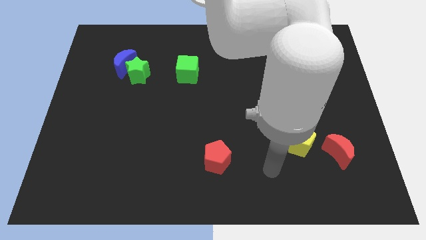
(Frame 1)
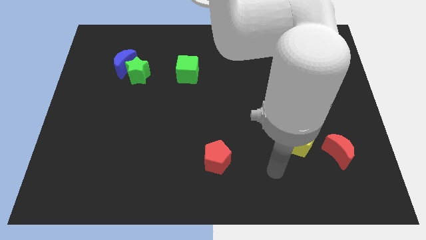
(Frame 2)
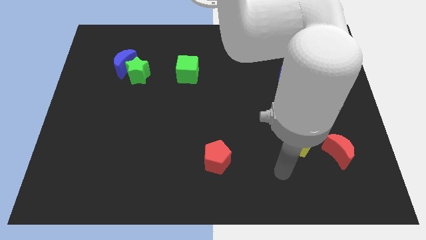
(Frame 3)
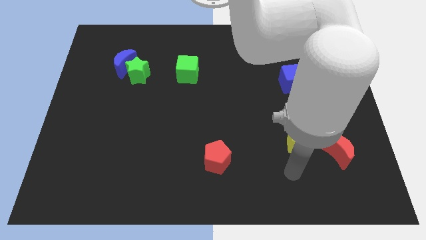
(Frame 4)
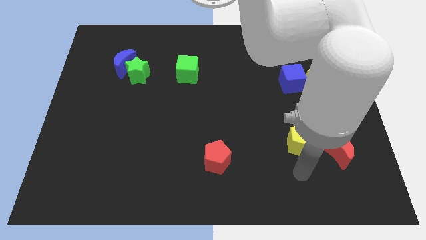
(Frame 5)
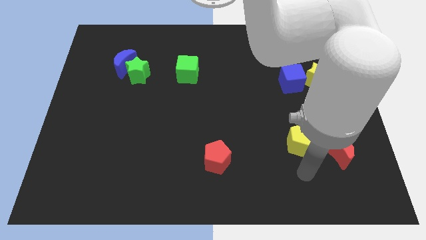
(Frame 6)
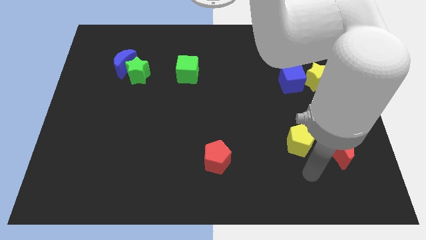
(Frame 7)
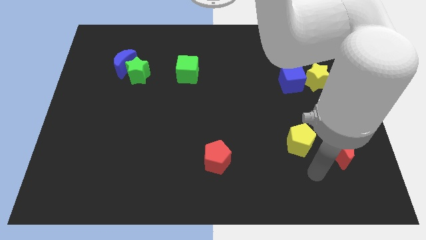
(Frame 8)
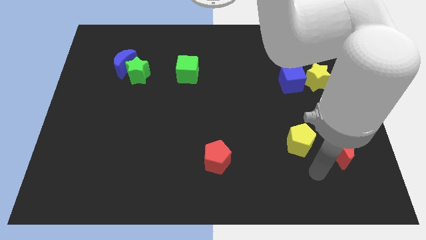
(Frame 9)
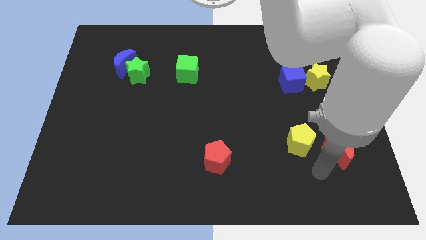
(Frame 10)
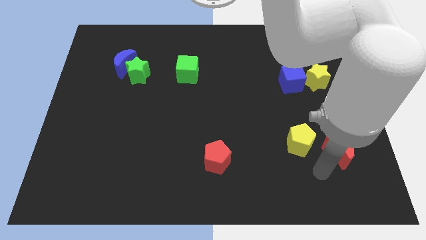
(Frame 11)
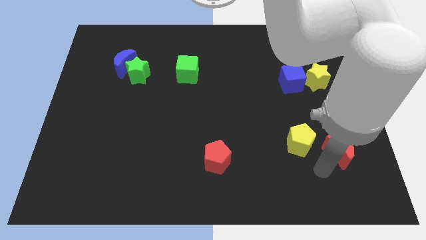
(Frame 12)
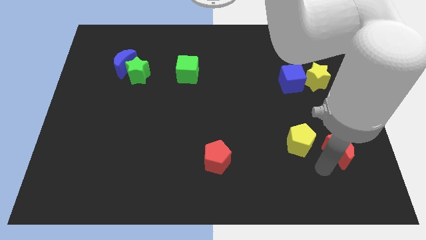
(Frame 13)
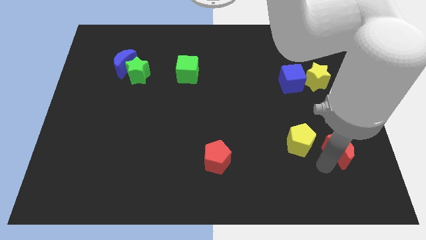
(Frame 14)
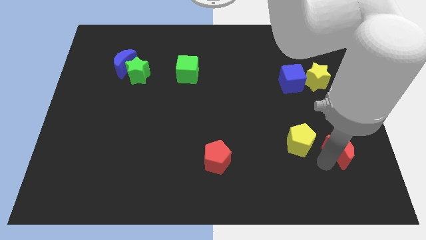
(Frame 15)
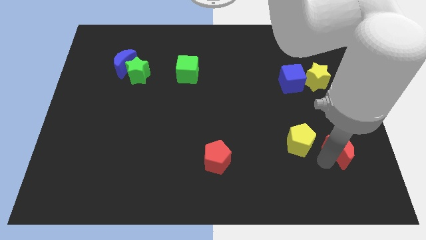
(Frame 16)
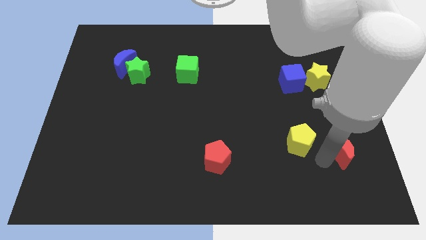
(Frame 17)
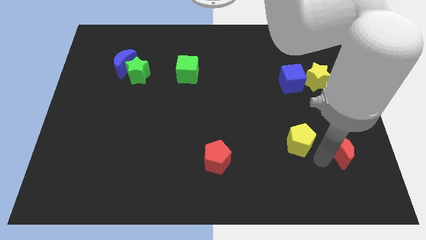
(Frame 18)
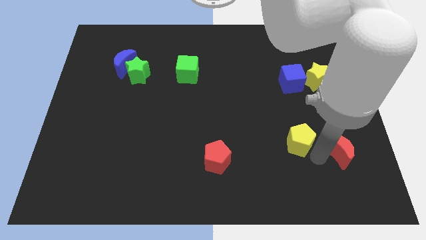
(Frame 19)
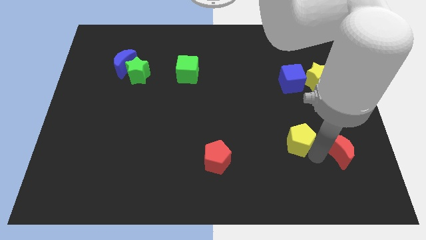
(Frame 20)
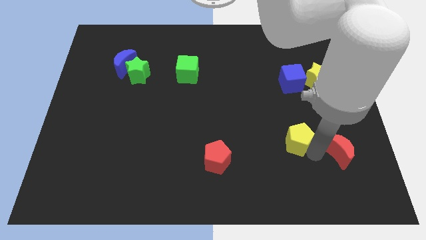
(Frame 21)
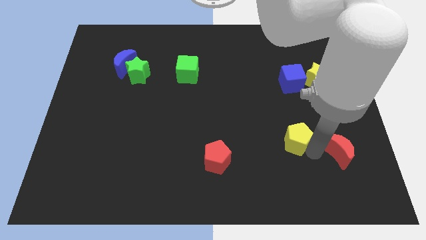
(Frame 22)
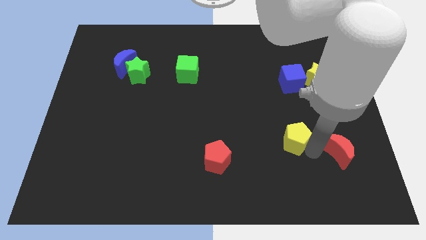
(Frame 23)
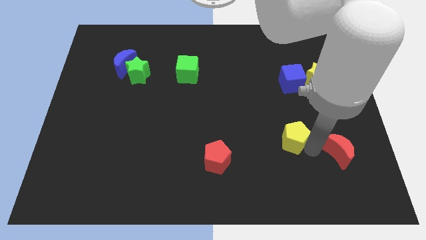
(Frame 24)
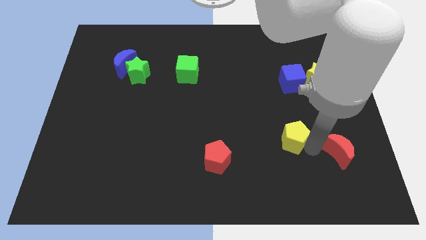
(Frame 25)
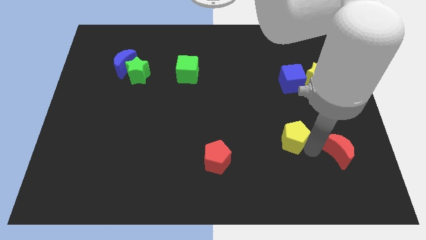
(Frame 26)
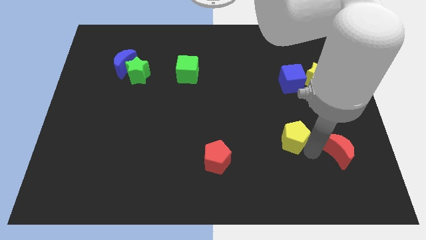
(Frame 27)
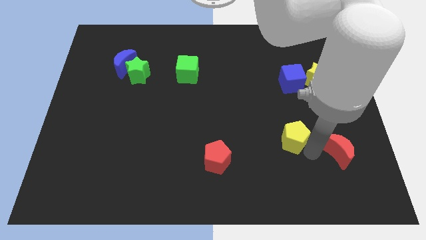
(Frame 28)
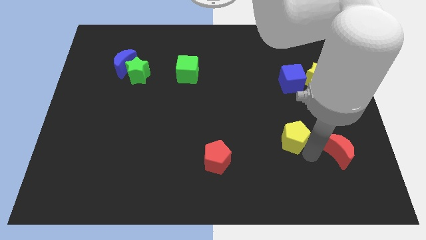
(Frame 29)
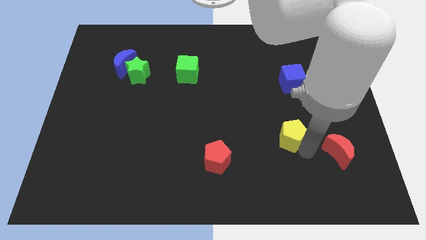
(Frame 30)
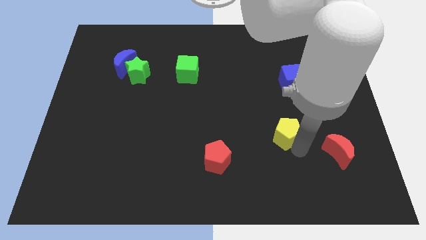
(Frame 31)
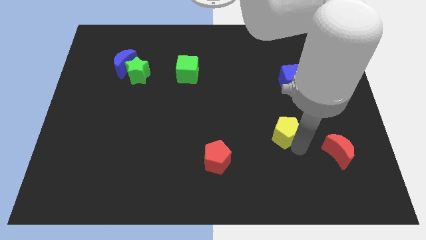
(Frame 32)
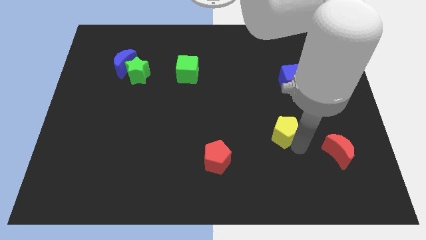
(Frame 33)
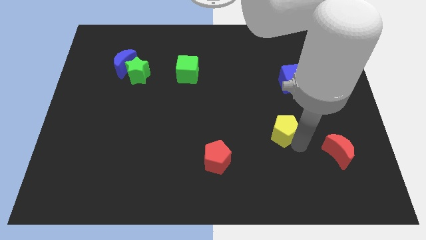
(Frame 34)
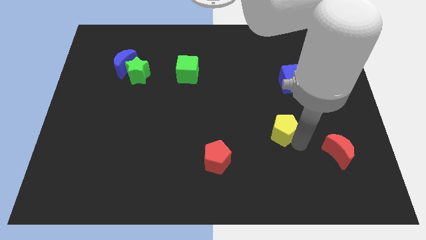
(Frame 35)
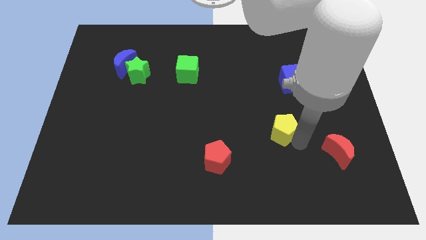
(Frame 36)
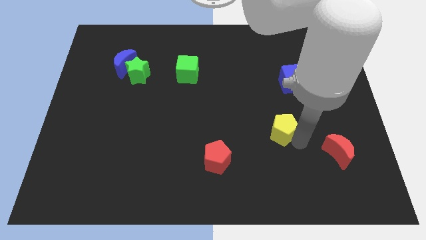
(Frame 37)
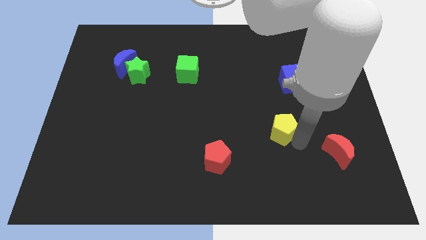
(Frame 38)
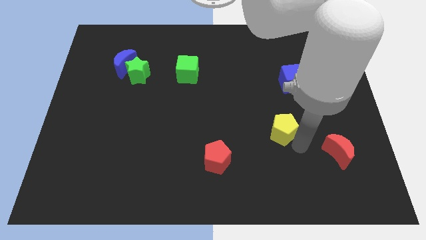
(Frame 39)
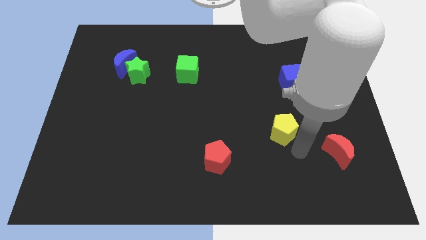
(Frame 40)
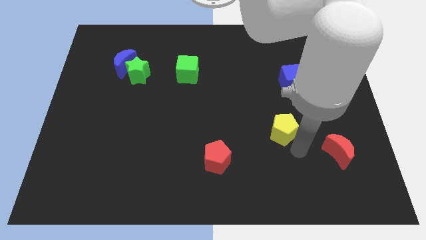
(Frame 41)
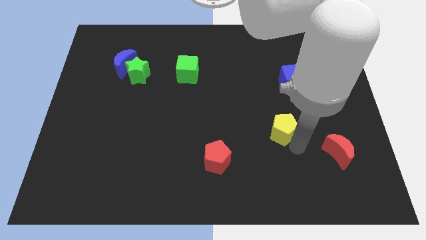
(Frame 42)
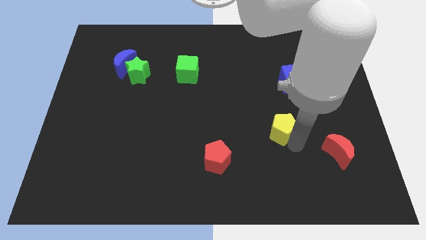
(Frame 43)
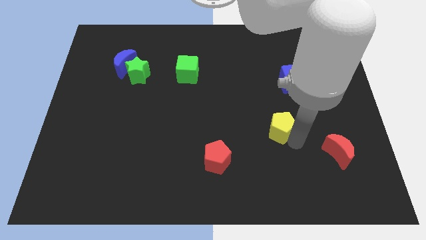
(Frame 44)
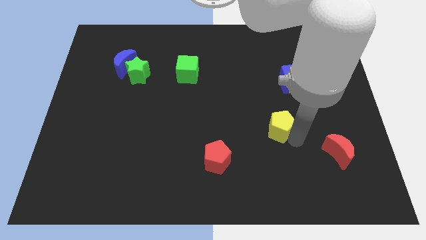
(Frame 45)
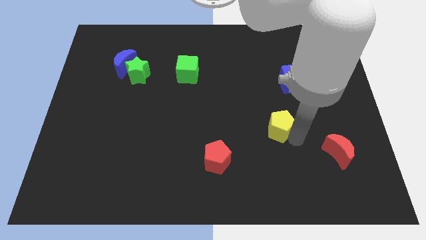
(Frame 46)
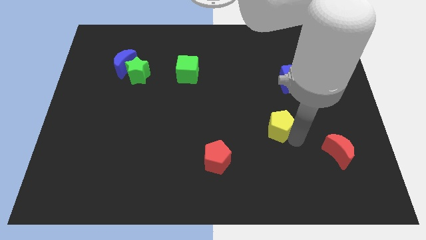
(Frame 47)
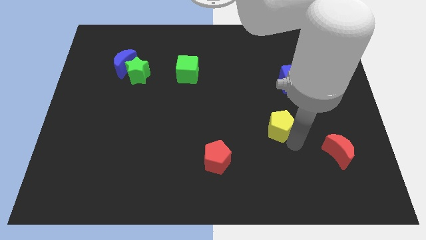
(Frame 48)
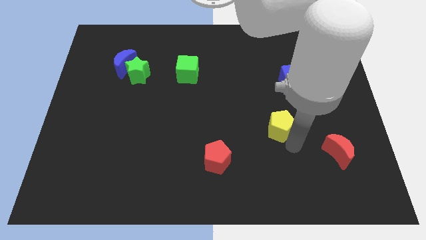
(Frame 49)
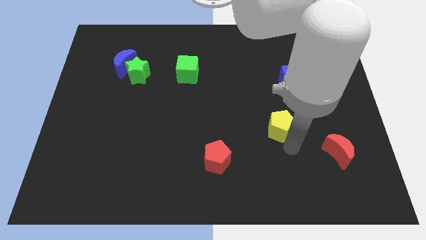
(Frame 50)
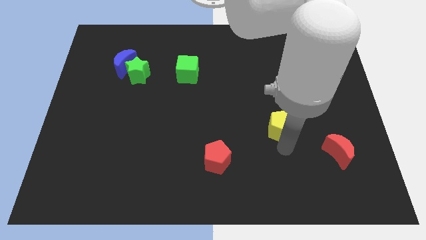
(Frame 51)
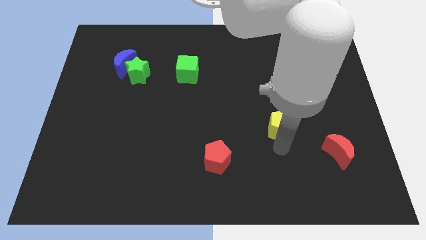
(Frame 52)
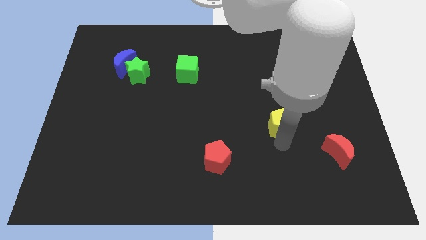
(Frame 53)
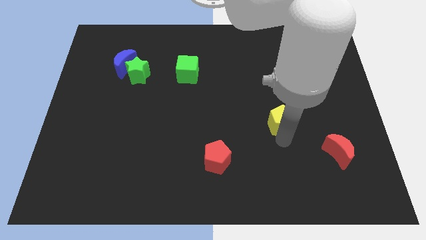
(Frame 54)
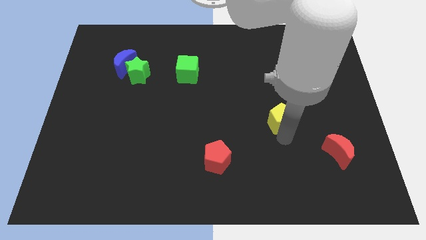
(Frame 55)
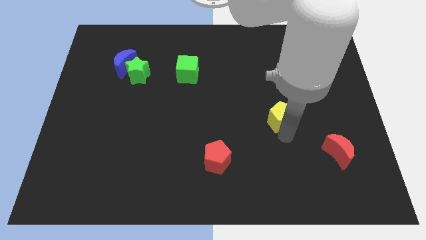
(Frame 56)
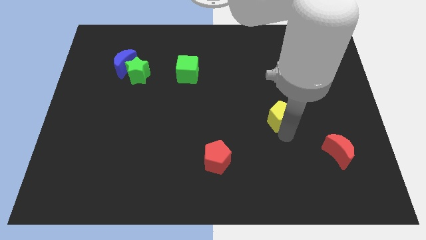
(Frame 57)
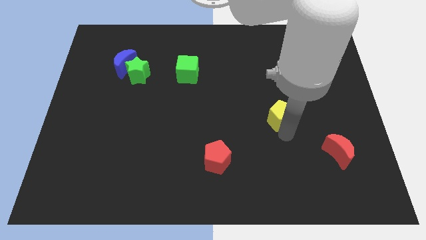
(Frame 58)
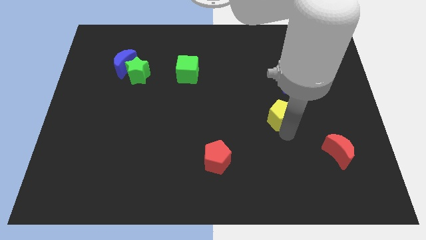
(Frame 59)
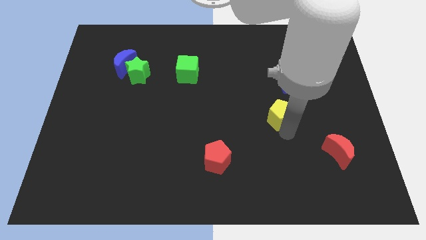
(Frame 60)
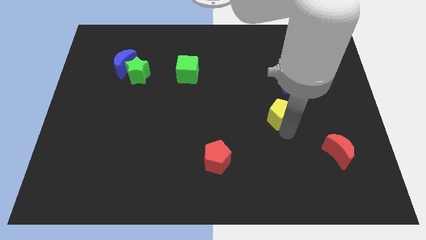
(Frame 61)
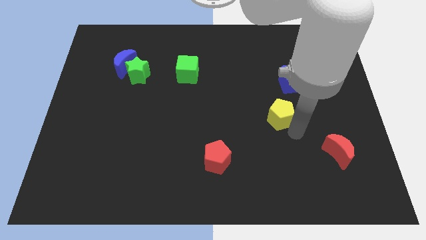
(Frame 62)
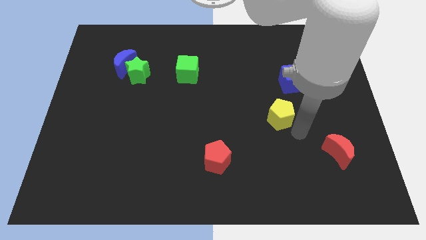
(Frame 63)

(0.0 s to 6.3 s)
slide the yellow pentagon diagonally top left to the red moon

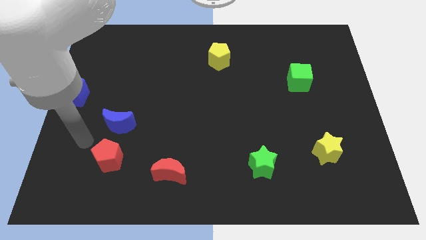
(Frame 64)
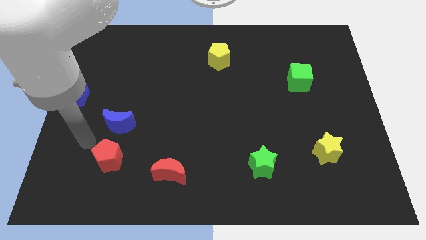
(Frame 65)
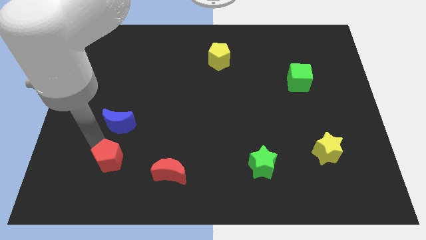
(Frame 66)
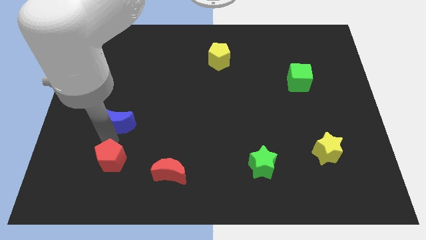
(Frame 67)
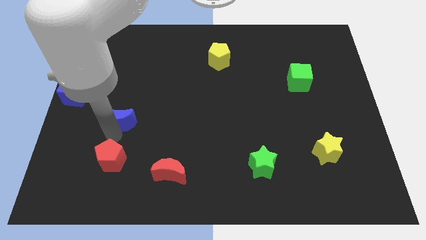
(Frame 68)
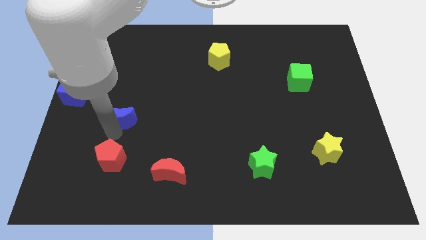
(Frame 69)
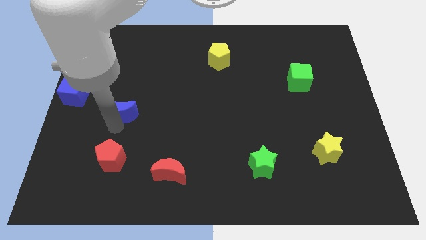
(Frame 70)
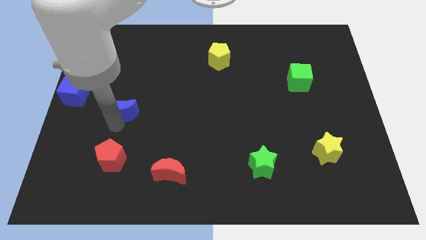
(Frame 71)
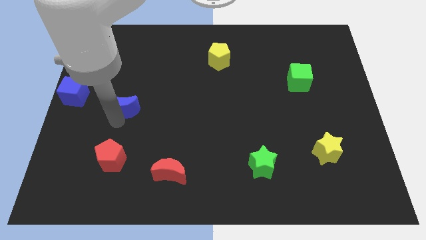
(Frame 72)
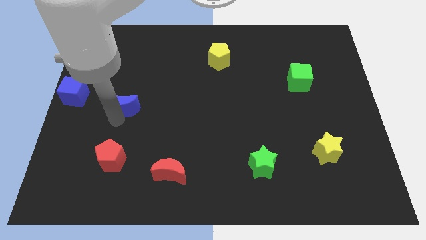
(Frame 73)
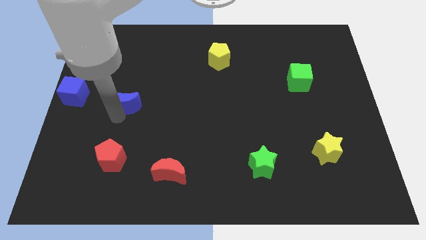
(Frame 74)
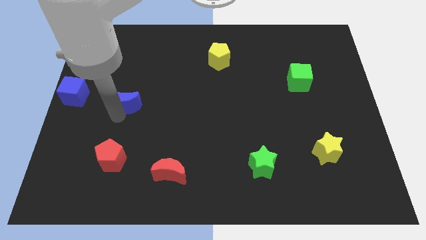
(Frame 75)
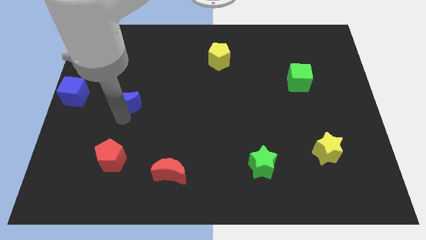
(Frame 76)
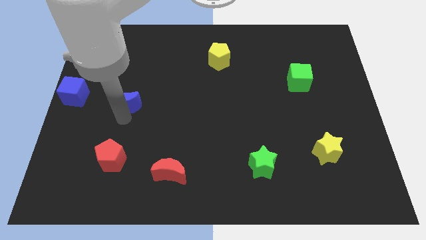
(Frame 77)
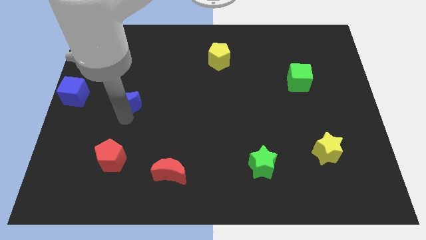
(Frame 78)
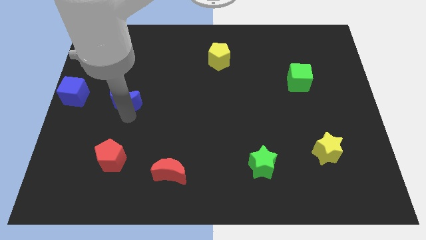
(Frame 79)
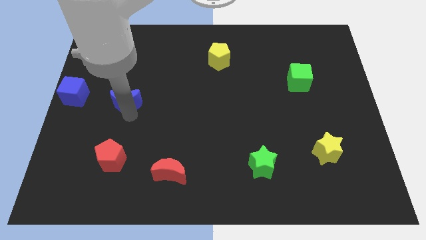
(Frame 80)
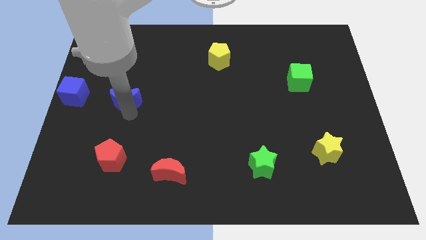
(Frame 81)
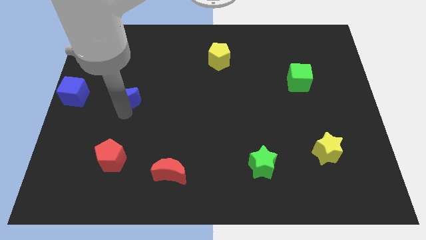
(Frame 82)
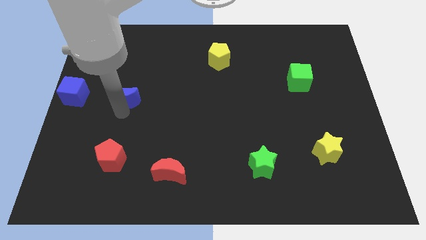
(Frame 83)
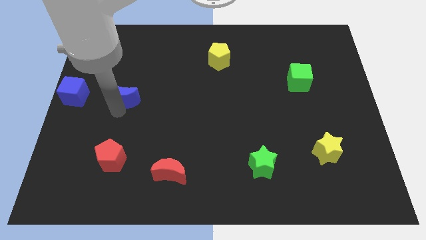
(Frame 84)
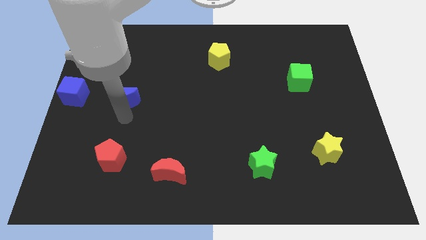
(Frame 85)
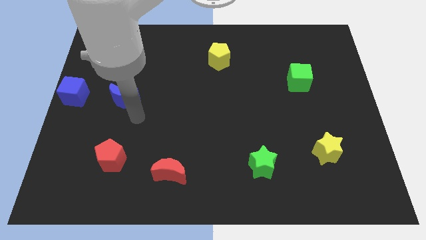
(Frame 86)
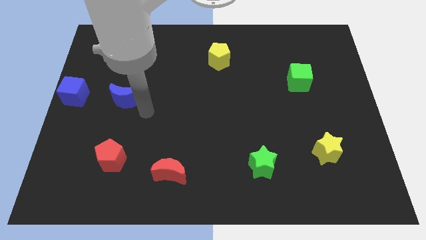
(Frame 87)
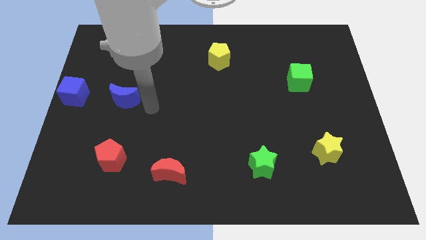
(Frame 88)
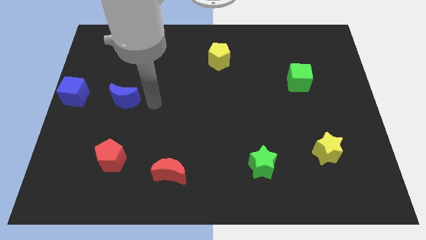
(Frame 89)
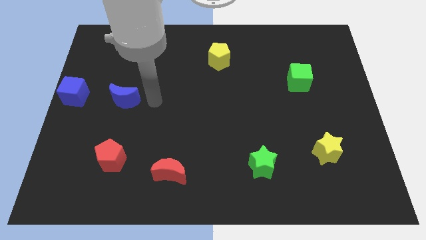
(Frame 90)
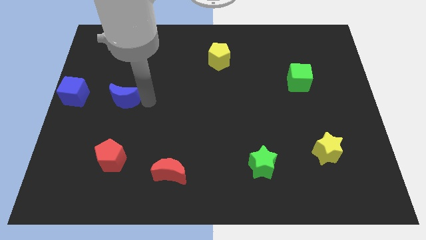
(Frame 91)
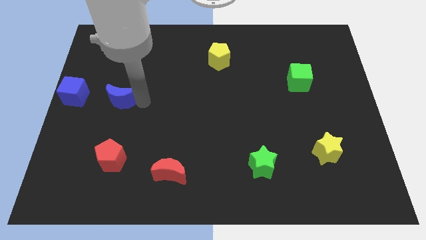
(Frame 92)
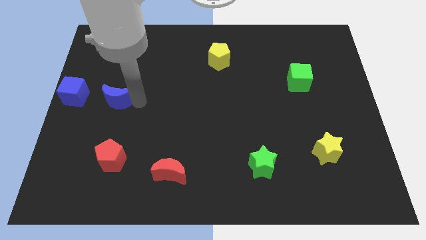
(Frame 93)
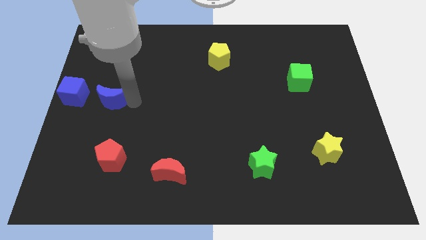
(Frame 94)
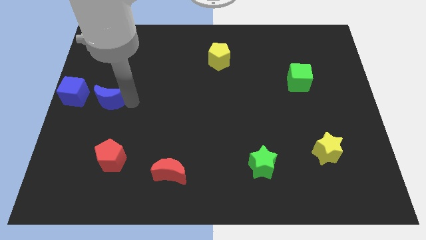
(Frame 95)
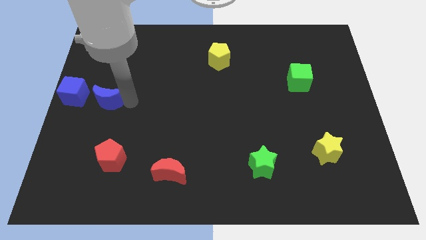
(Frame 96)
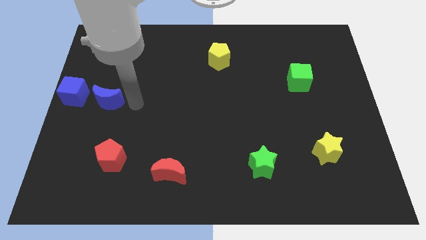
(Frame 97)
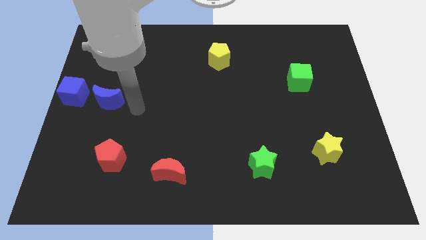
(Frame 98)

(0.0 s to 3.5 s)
push the blue moon to the right side of the blue cube
